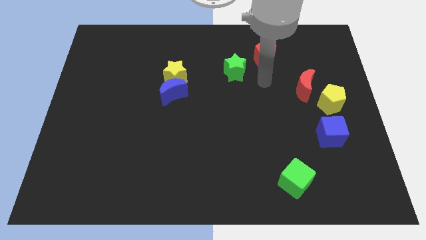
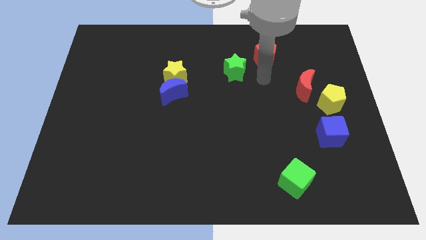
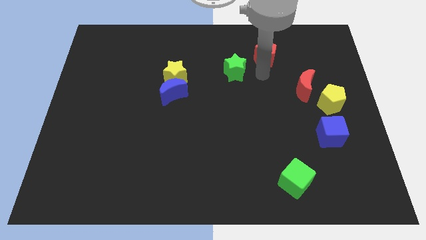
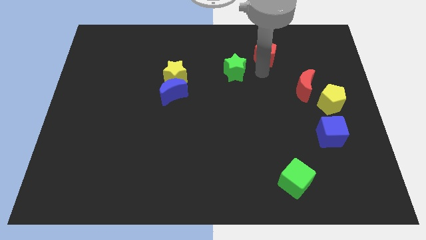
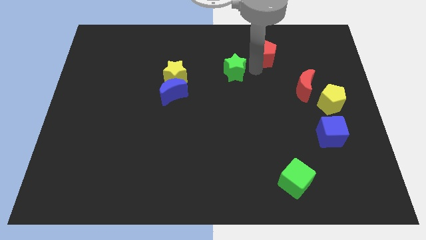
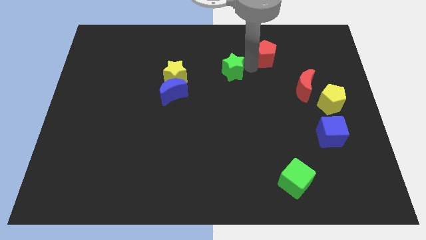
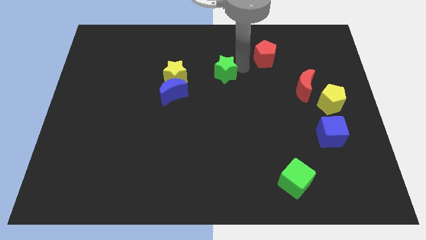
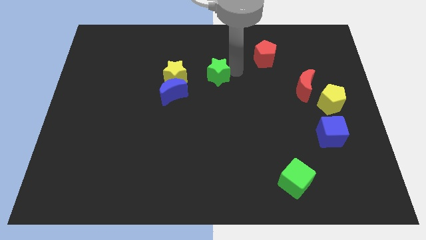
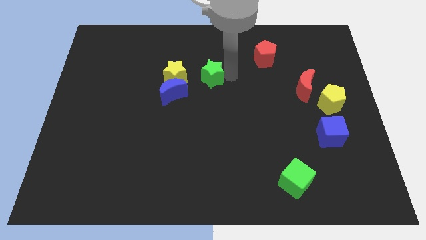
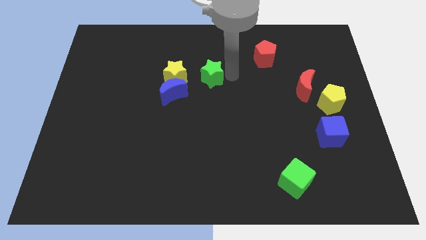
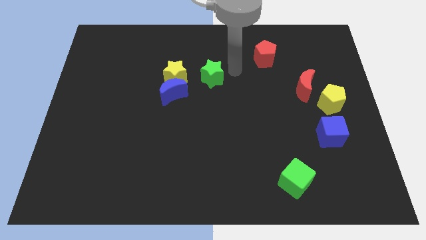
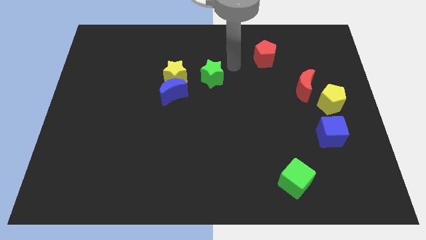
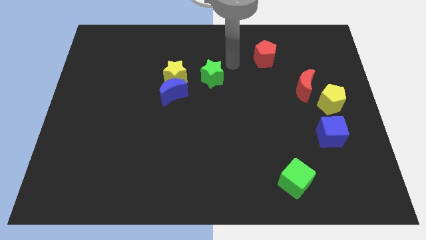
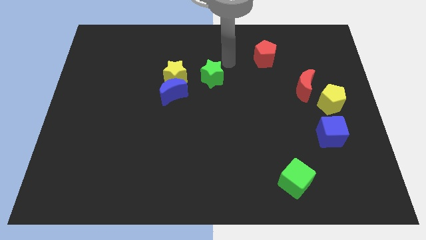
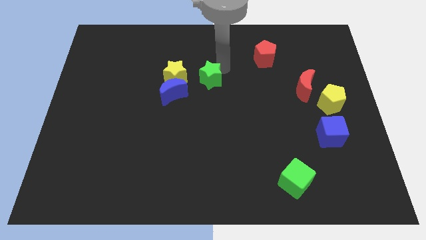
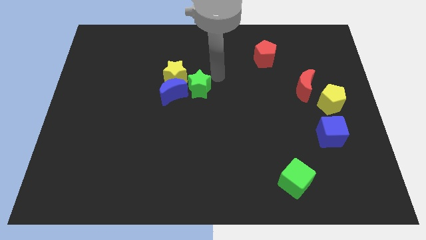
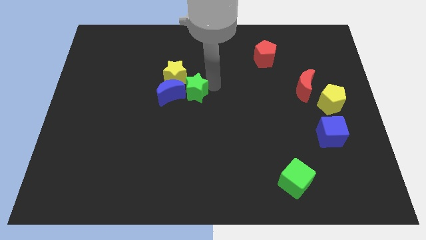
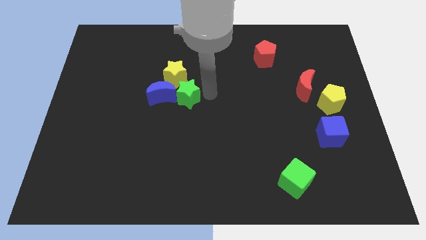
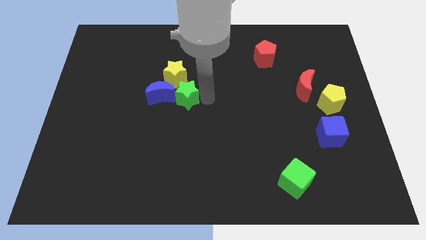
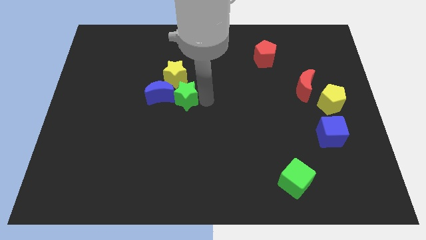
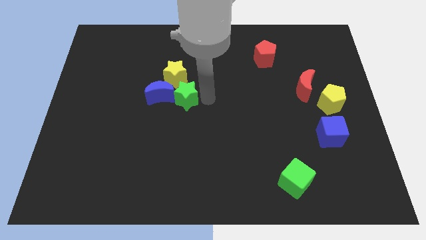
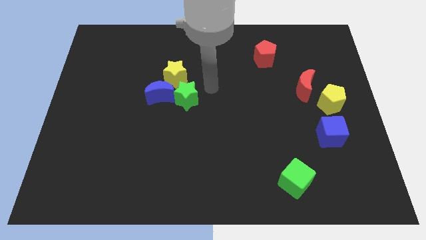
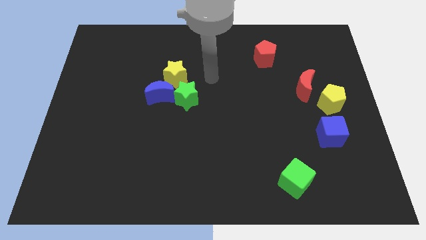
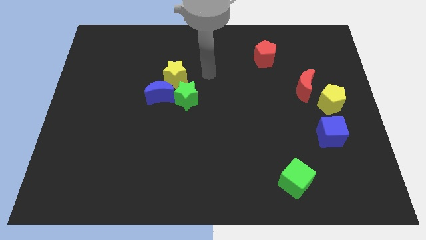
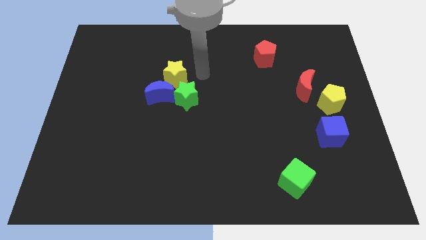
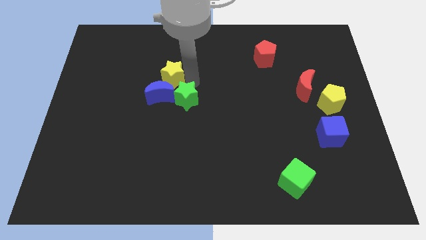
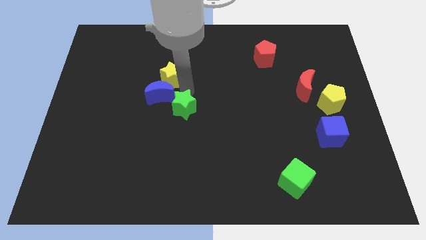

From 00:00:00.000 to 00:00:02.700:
push the green star to the bottom right of the blue crescent

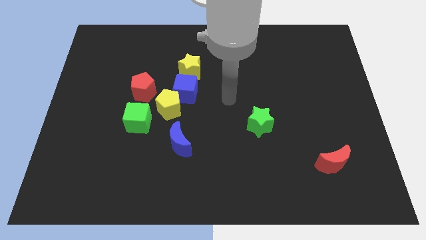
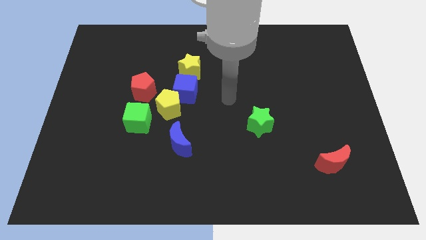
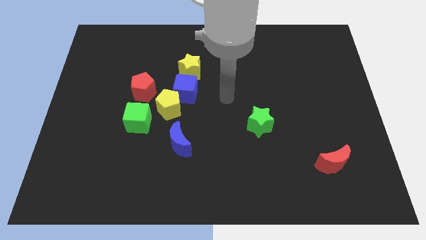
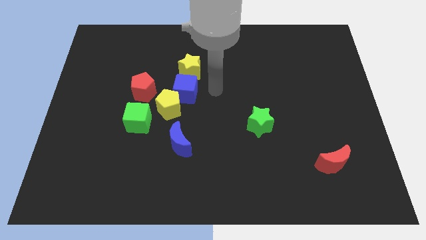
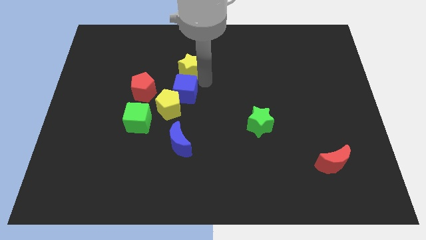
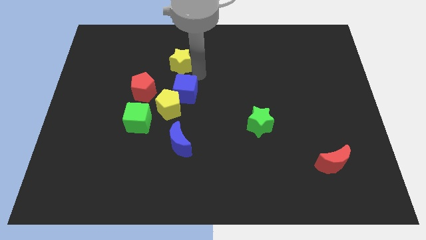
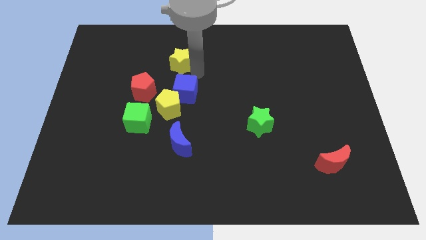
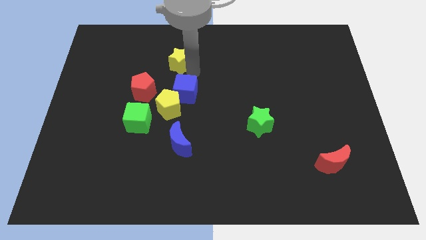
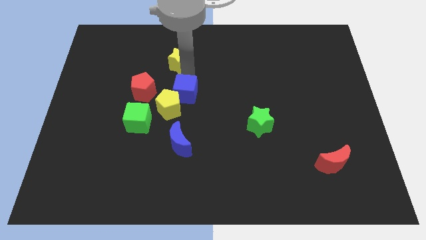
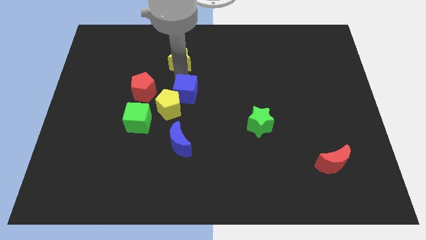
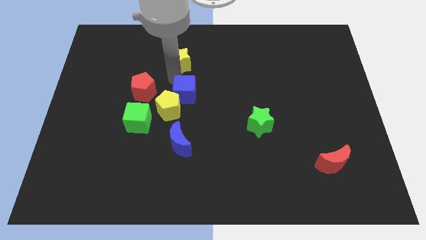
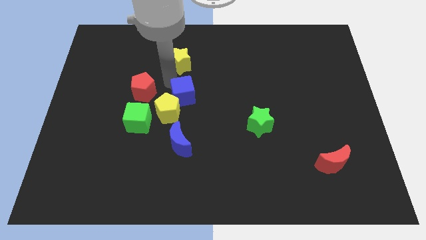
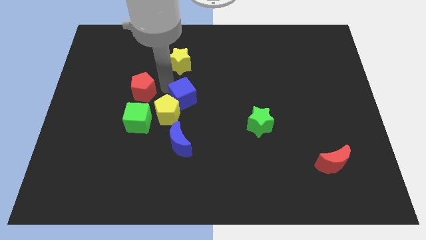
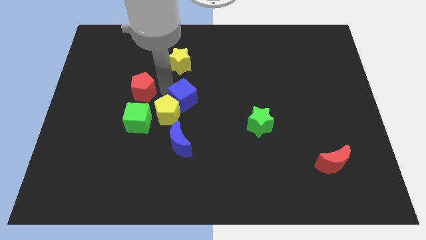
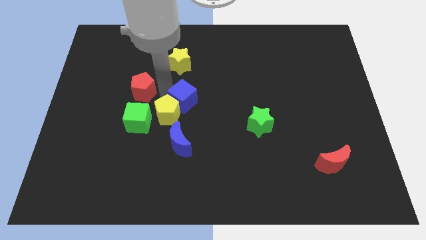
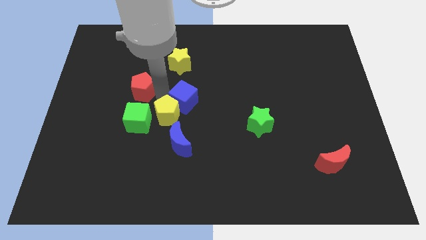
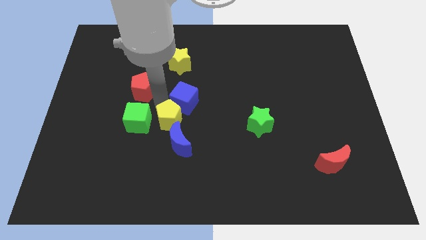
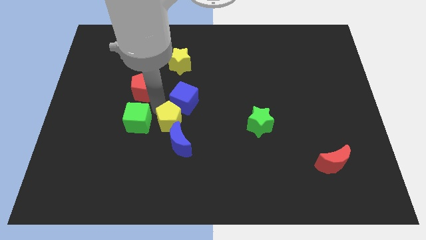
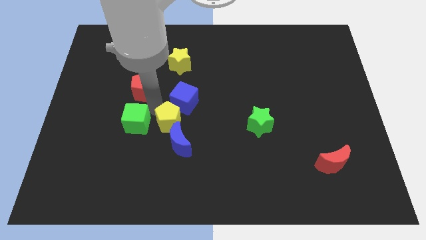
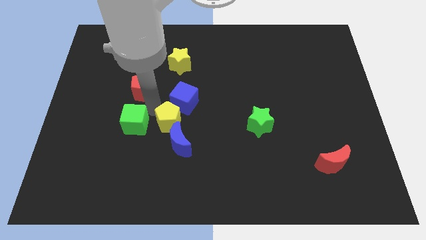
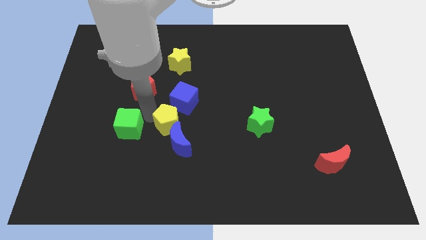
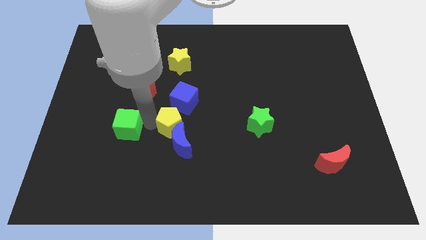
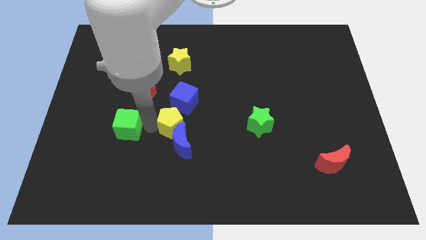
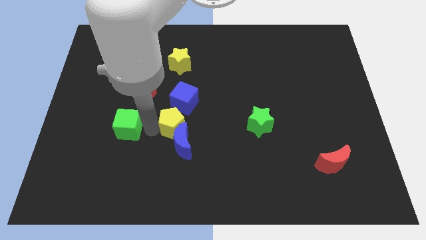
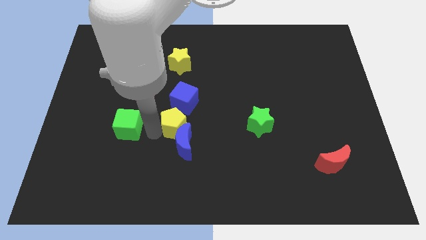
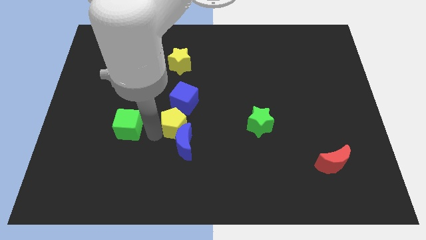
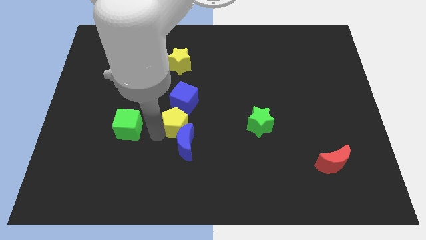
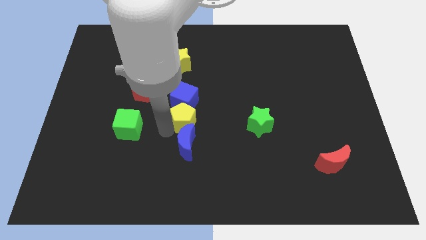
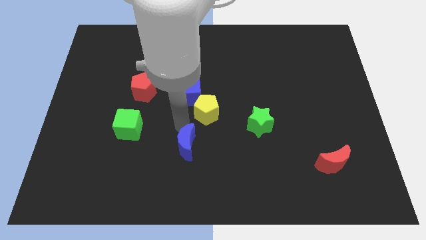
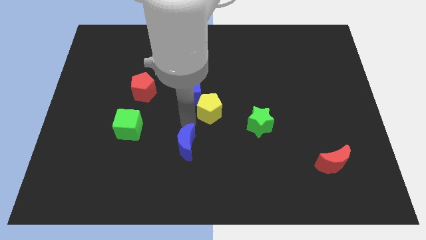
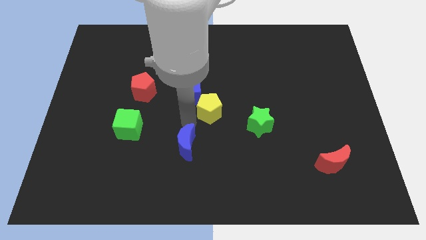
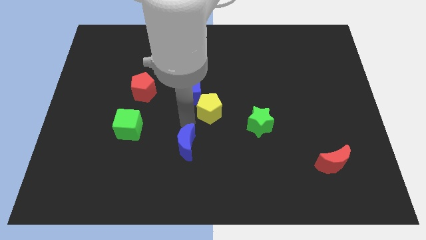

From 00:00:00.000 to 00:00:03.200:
move the yellow pentagon to the bottom right side of the blue cube

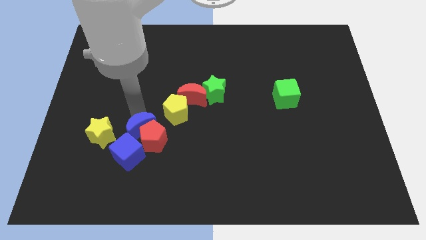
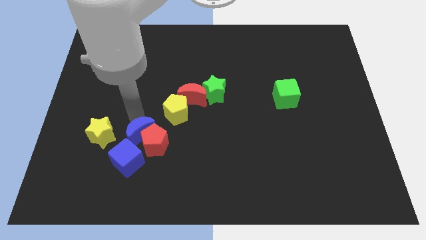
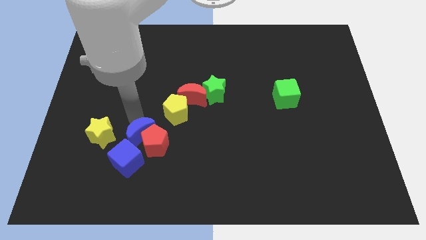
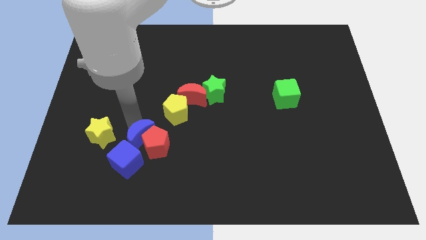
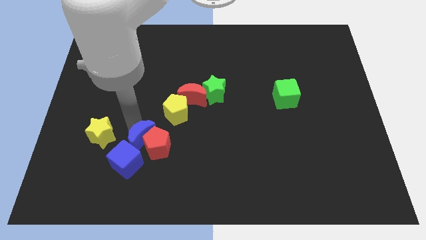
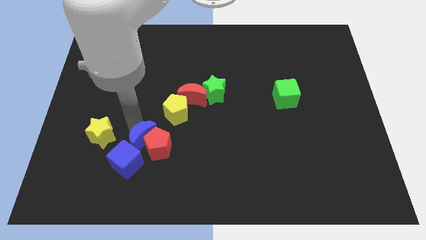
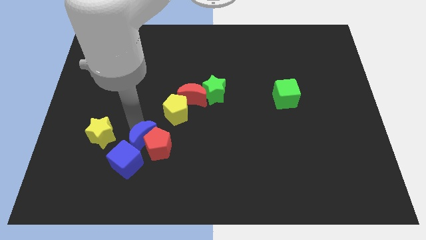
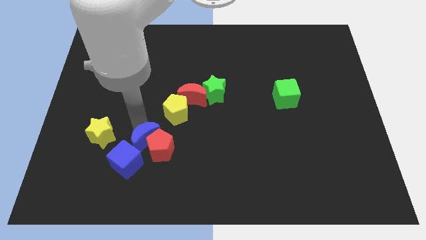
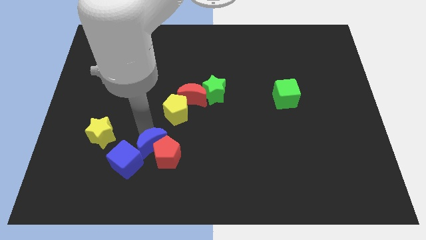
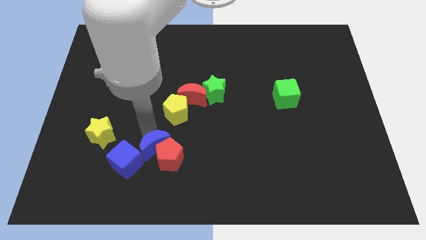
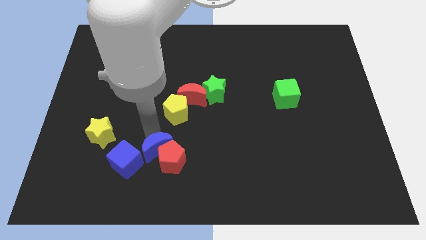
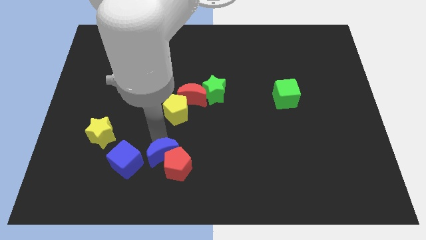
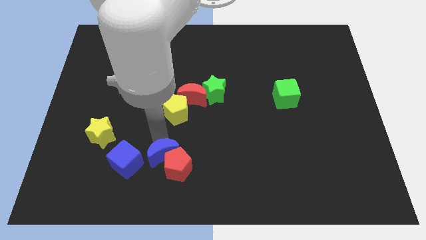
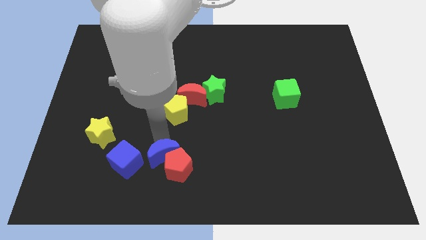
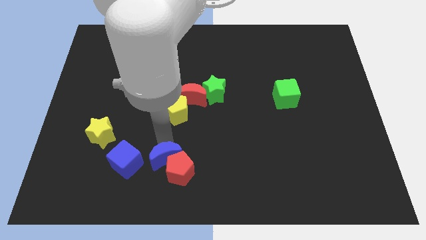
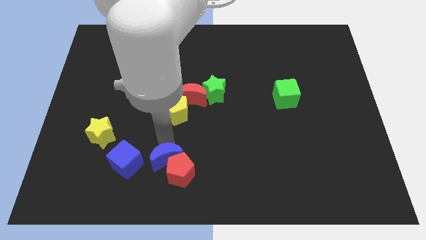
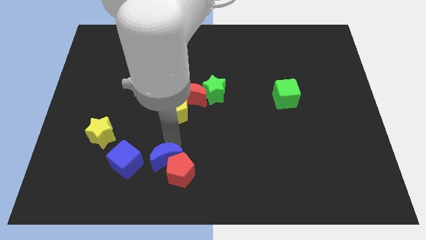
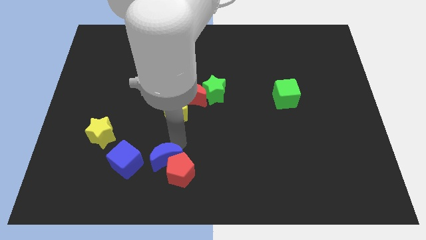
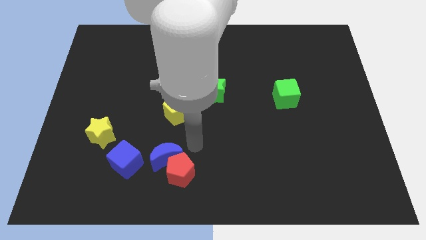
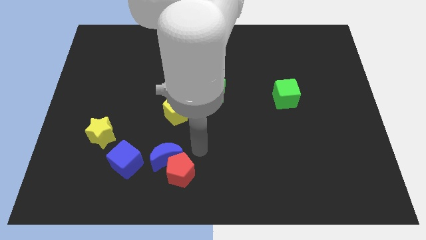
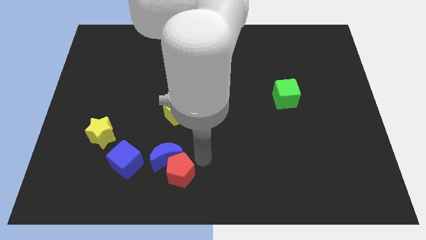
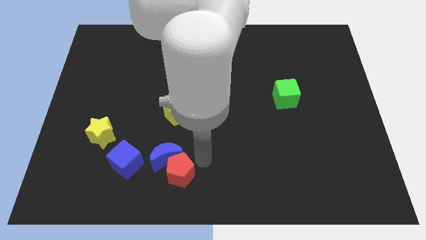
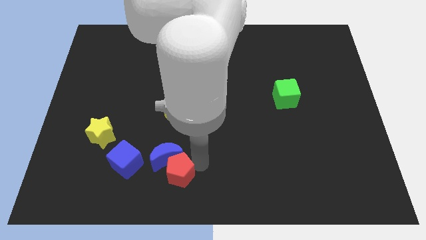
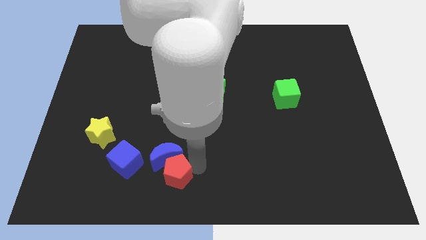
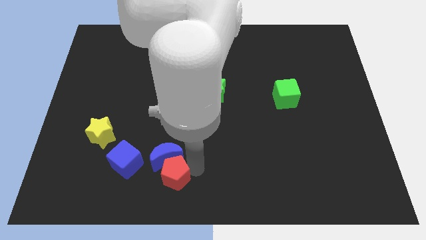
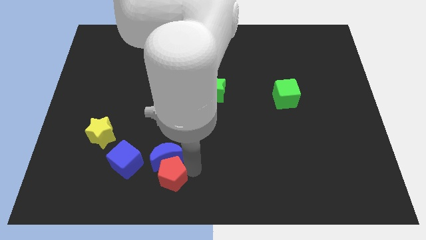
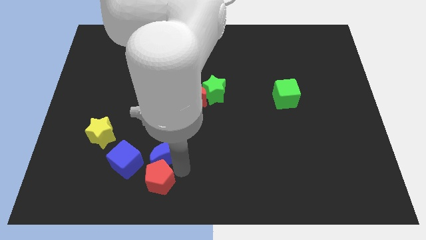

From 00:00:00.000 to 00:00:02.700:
place the blue crescent and red pentagon below the yellow pentagon

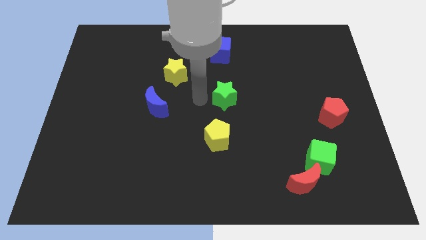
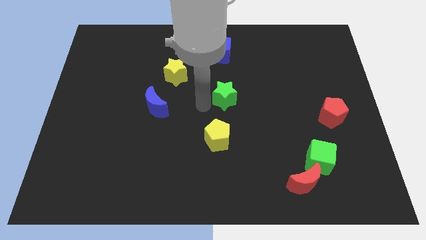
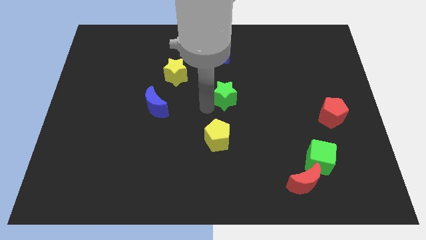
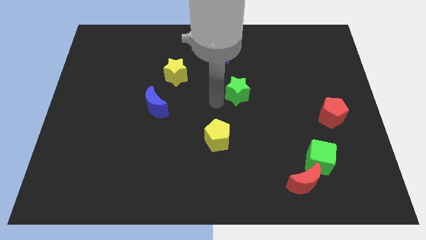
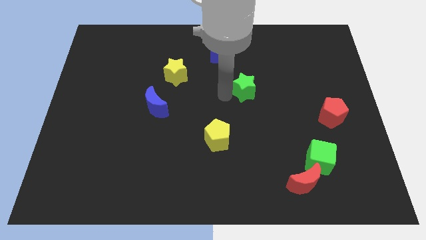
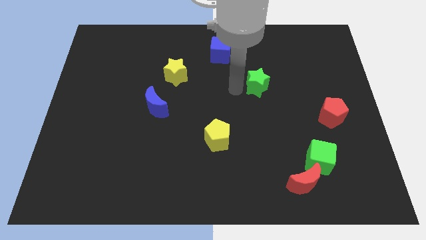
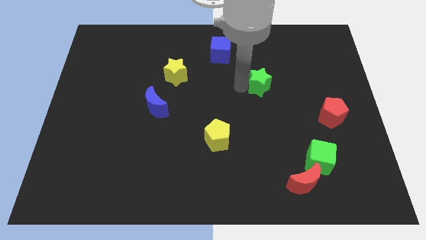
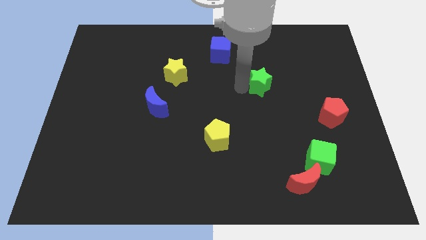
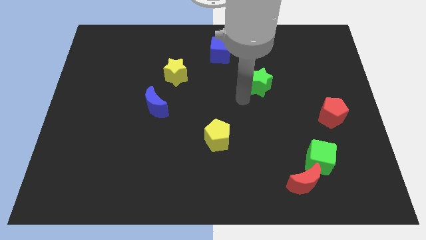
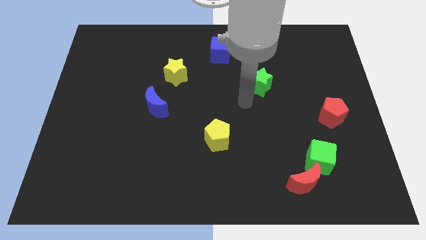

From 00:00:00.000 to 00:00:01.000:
move green star away of the center of the board
